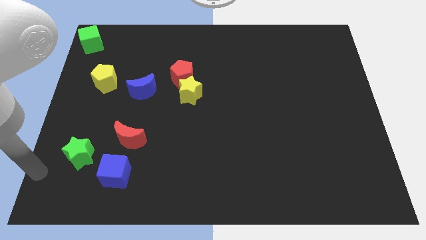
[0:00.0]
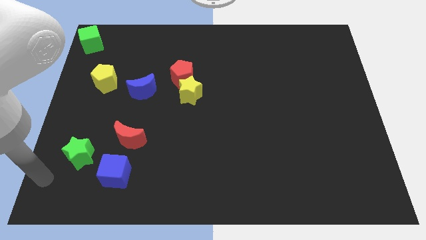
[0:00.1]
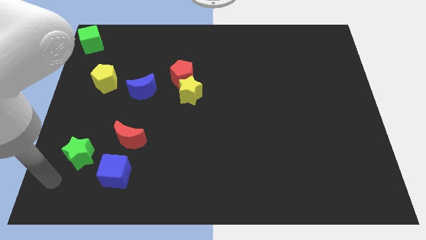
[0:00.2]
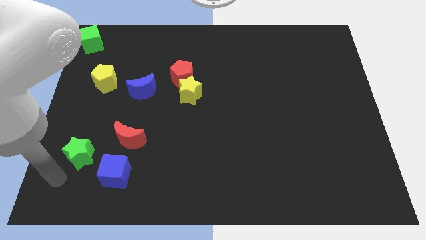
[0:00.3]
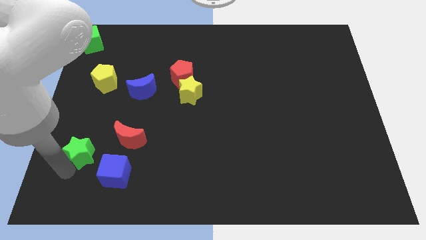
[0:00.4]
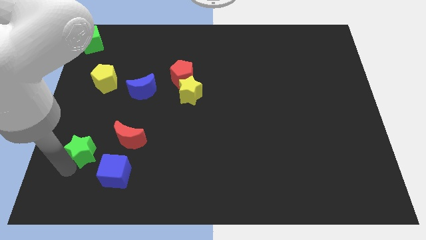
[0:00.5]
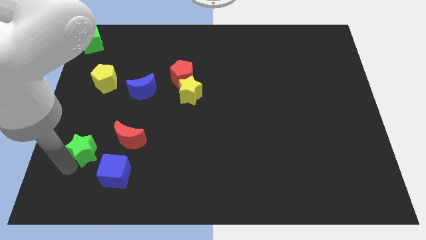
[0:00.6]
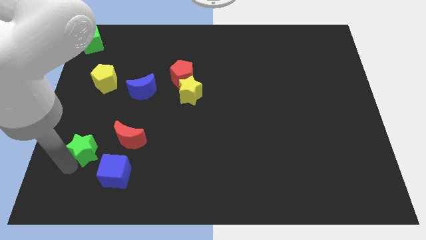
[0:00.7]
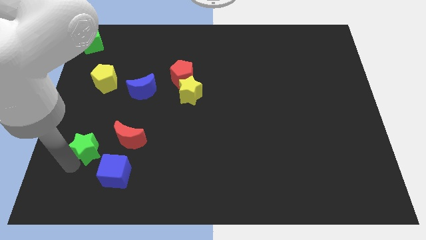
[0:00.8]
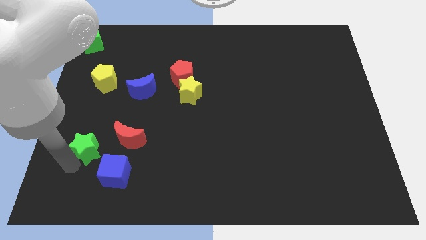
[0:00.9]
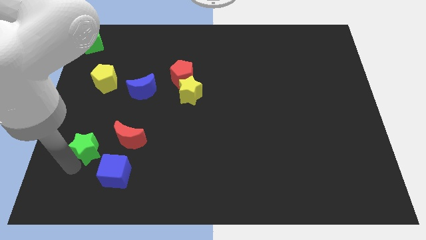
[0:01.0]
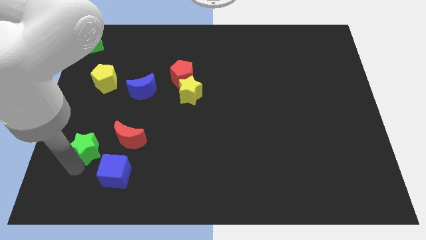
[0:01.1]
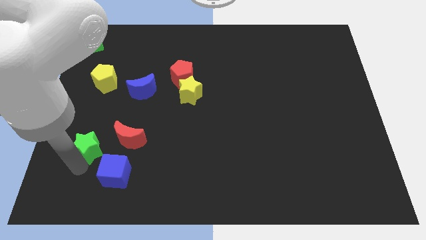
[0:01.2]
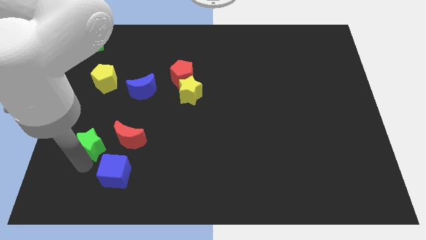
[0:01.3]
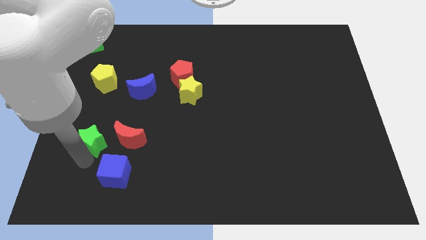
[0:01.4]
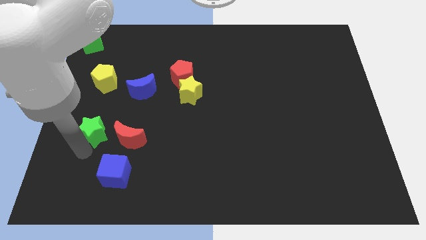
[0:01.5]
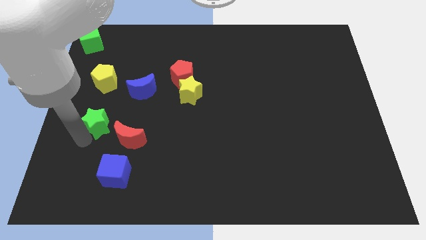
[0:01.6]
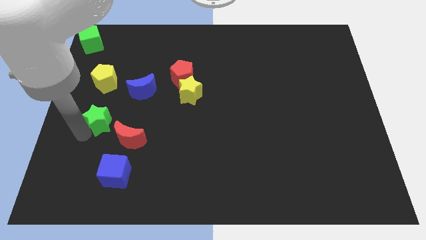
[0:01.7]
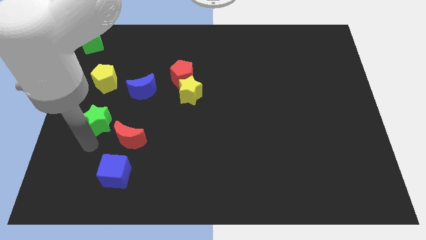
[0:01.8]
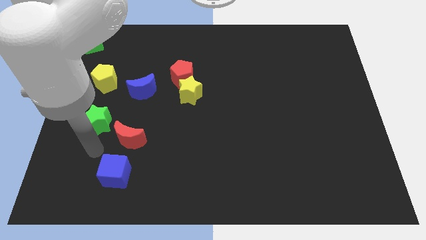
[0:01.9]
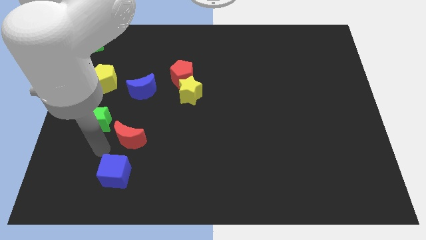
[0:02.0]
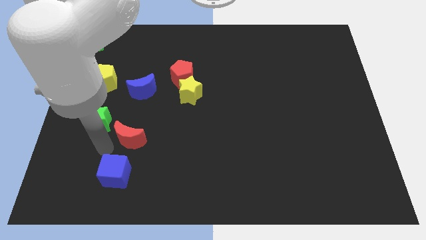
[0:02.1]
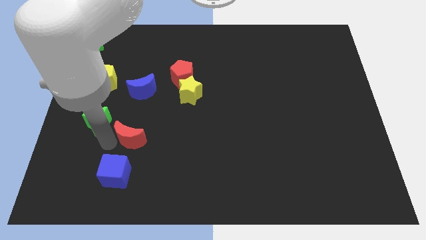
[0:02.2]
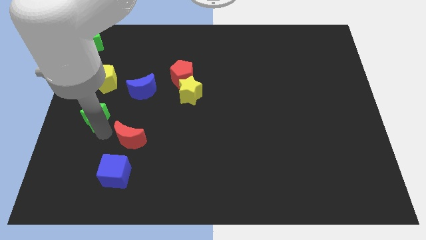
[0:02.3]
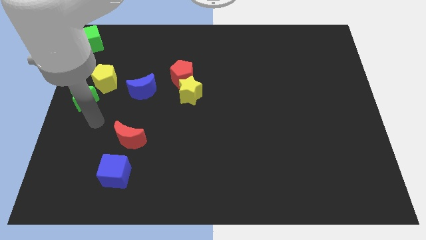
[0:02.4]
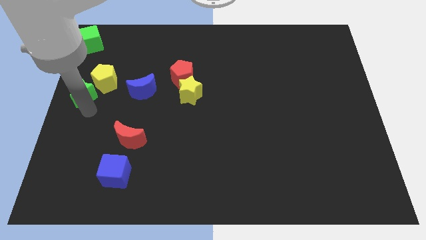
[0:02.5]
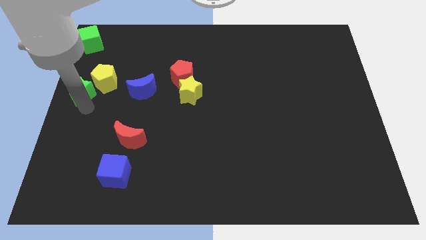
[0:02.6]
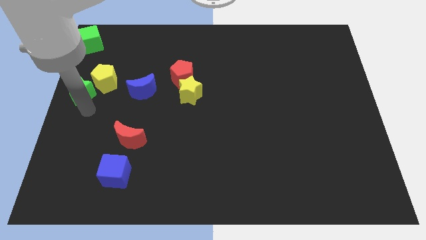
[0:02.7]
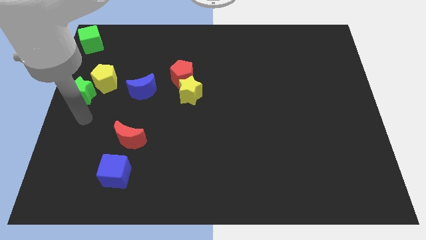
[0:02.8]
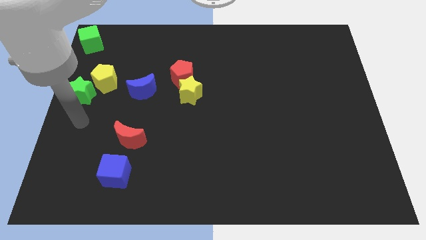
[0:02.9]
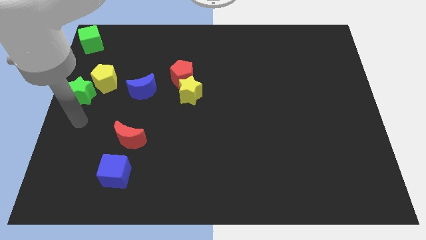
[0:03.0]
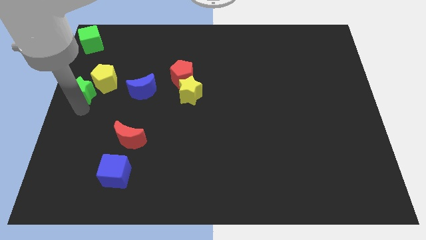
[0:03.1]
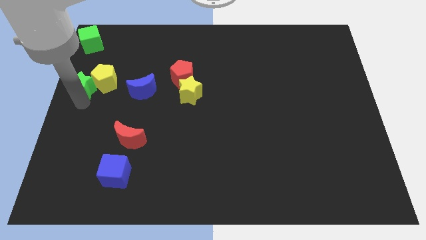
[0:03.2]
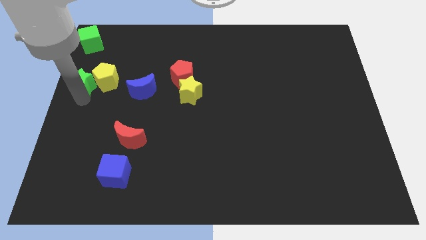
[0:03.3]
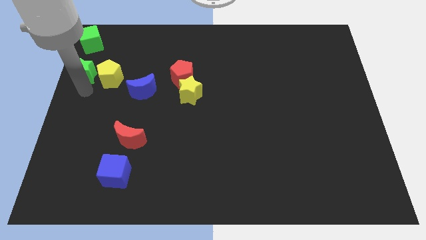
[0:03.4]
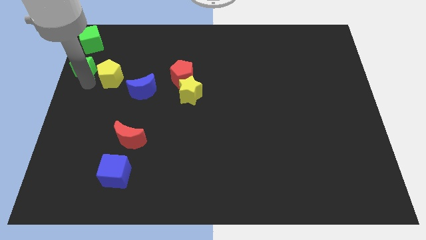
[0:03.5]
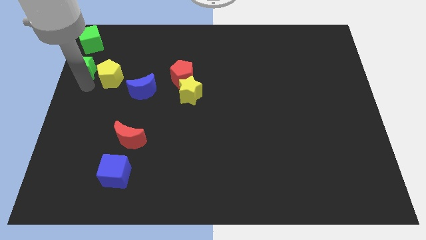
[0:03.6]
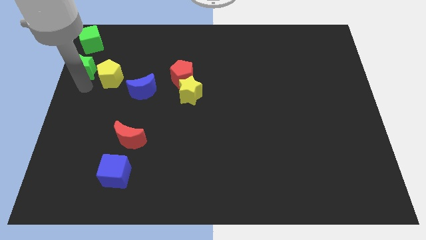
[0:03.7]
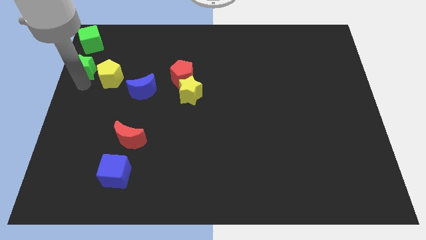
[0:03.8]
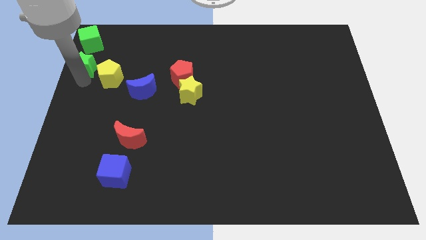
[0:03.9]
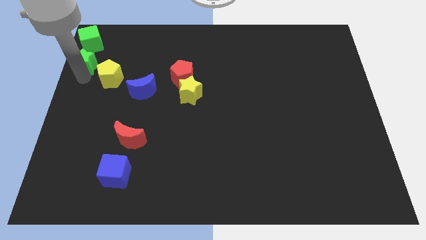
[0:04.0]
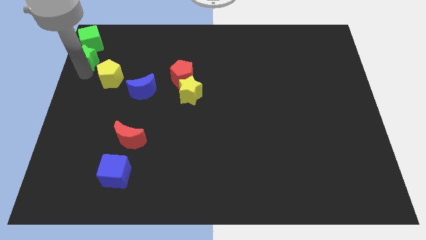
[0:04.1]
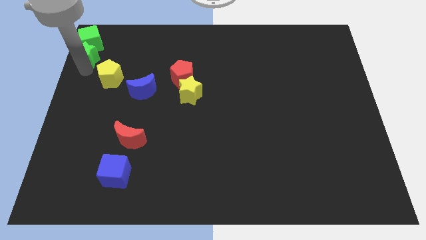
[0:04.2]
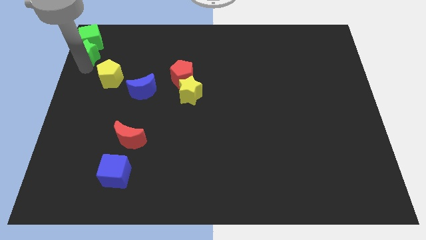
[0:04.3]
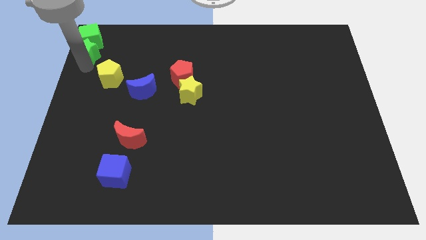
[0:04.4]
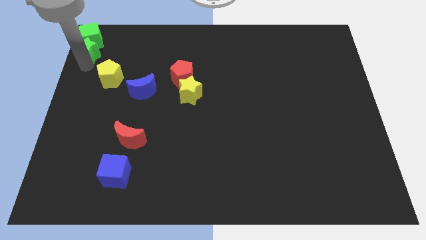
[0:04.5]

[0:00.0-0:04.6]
move the green star to the bottom of the green cube

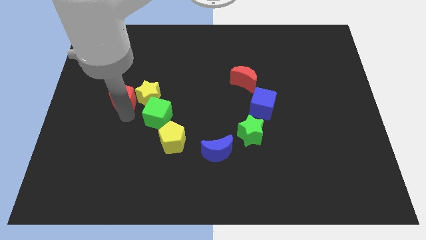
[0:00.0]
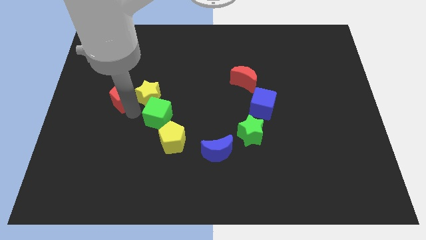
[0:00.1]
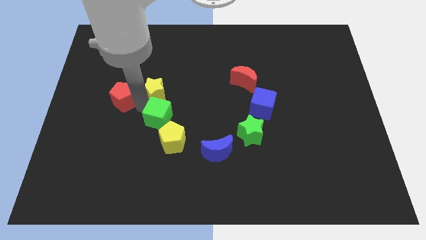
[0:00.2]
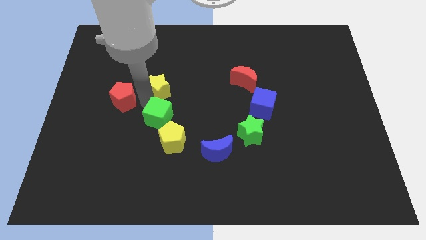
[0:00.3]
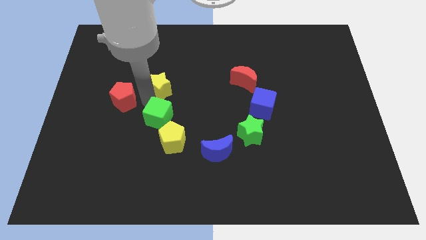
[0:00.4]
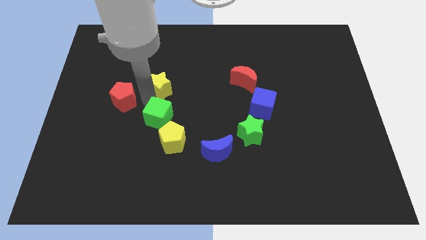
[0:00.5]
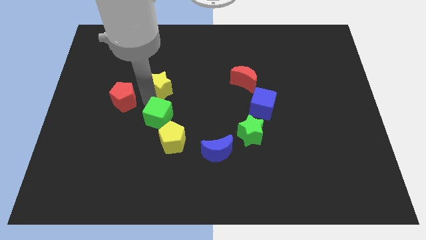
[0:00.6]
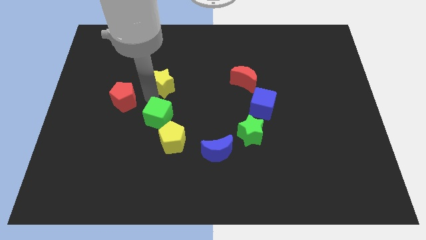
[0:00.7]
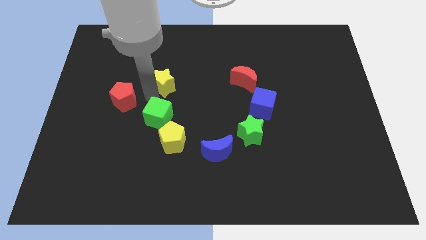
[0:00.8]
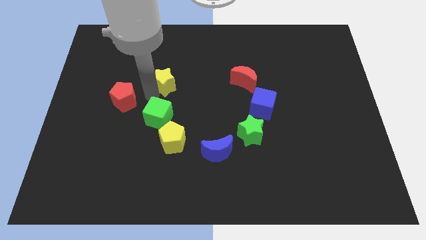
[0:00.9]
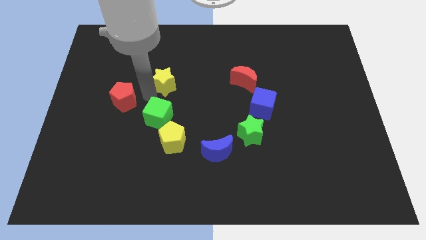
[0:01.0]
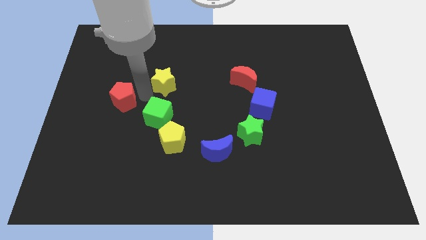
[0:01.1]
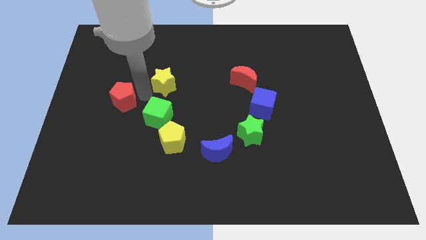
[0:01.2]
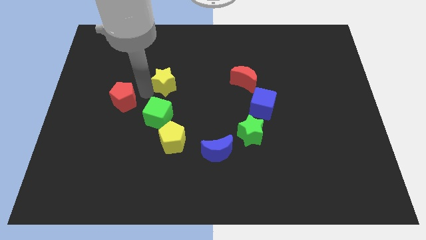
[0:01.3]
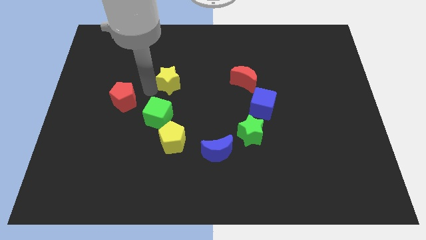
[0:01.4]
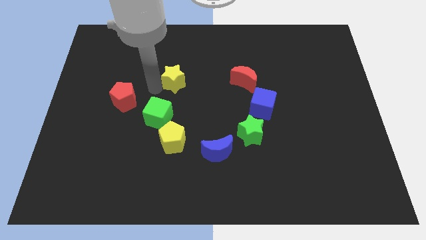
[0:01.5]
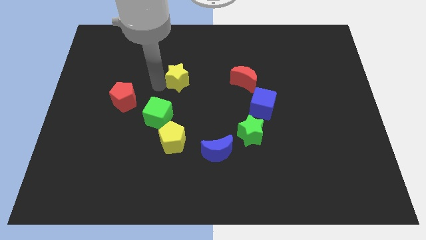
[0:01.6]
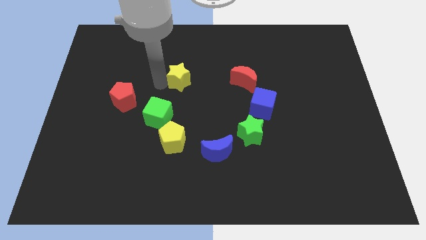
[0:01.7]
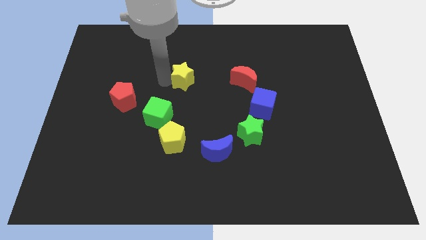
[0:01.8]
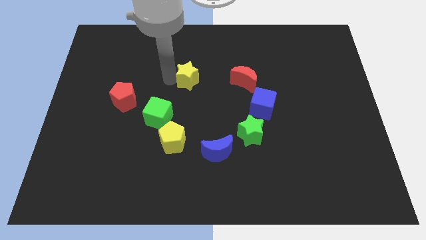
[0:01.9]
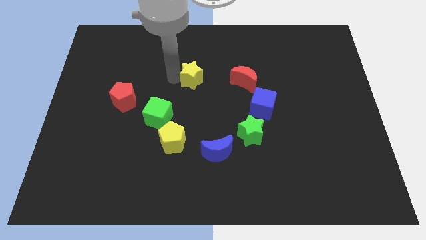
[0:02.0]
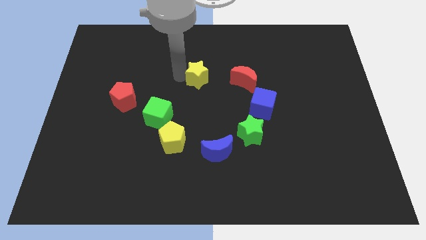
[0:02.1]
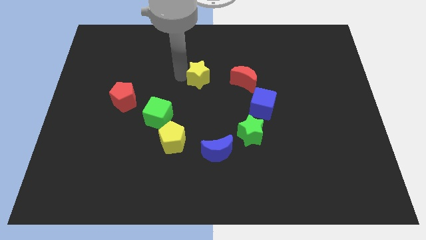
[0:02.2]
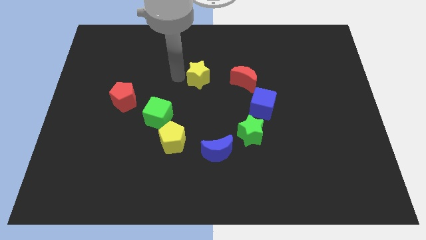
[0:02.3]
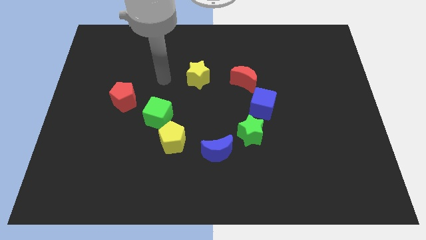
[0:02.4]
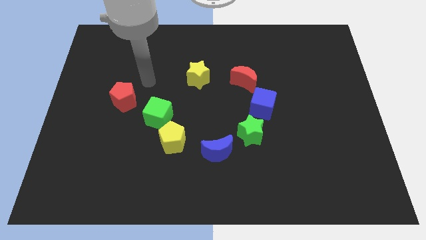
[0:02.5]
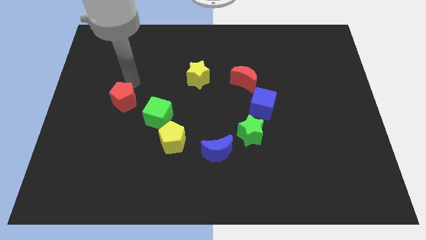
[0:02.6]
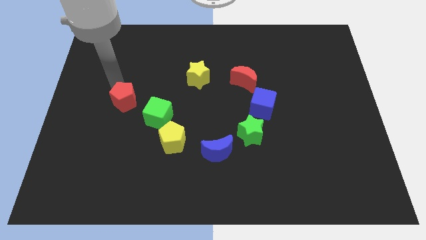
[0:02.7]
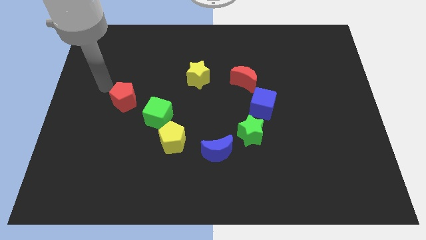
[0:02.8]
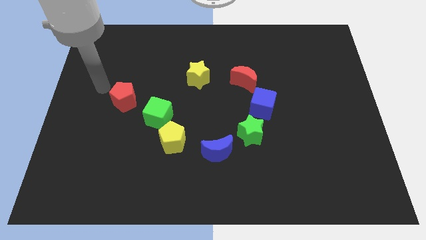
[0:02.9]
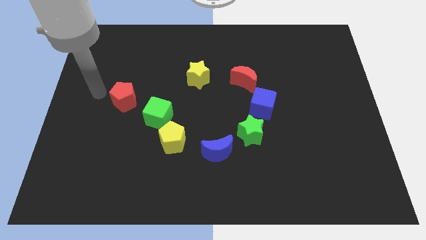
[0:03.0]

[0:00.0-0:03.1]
move the yellow star towards the left of red moon

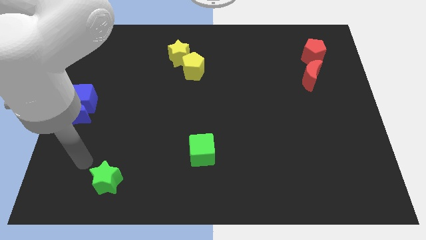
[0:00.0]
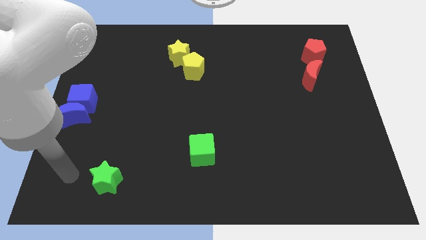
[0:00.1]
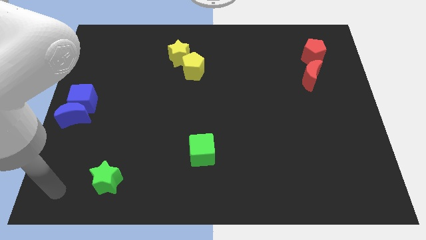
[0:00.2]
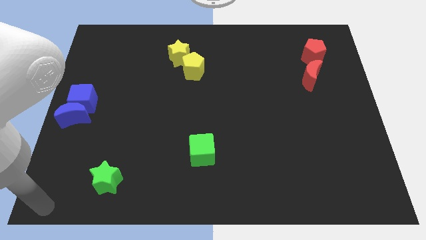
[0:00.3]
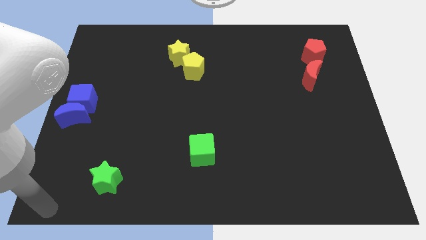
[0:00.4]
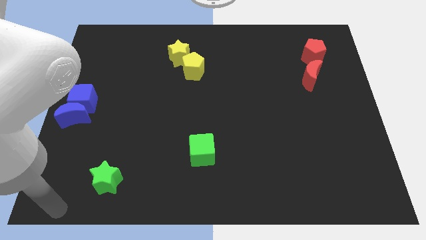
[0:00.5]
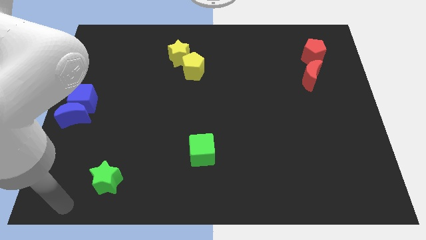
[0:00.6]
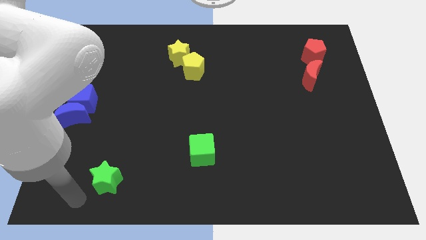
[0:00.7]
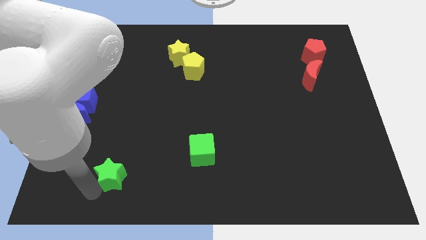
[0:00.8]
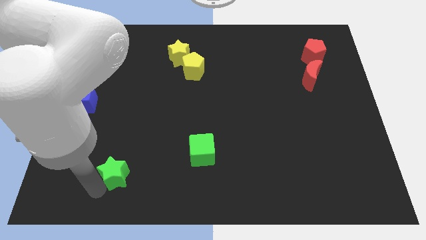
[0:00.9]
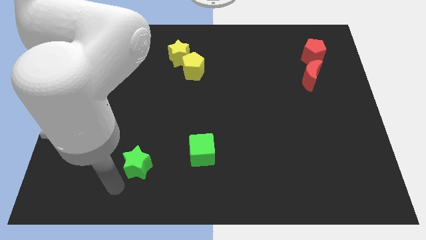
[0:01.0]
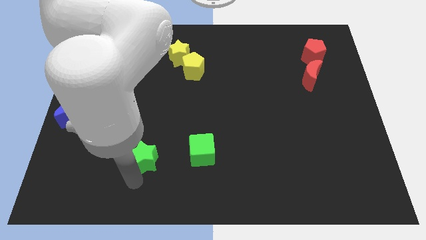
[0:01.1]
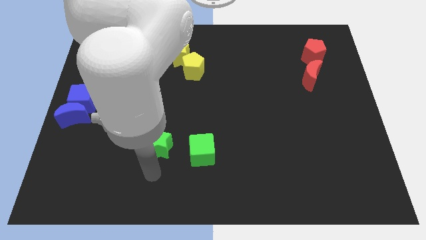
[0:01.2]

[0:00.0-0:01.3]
push green star towards green cube

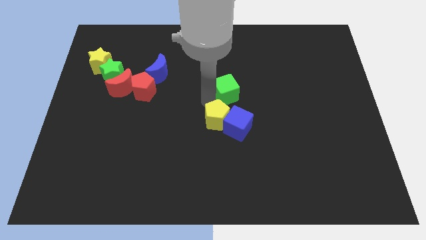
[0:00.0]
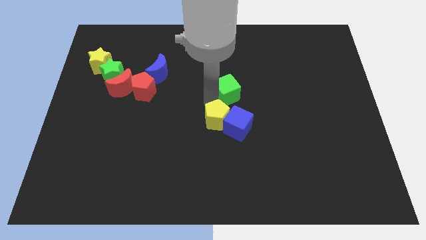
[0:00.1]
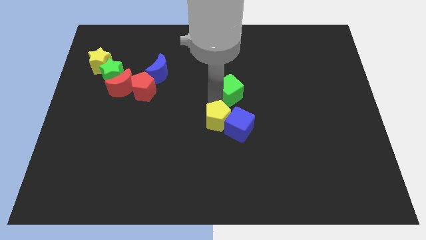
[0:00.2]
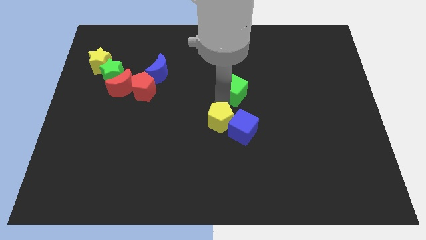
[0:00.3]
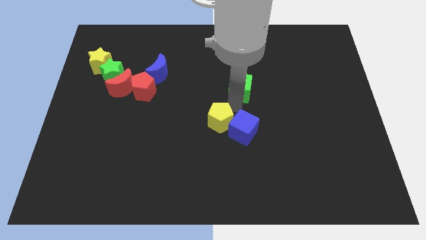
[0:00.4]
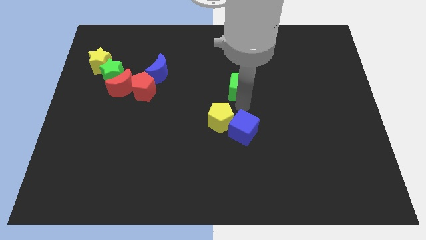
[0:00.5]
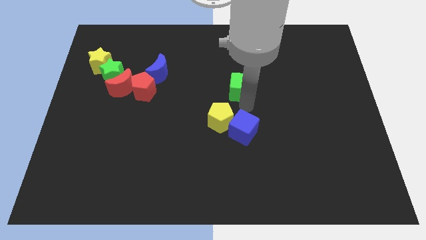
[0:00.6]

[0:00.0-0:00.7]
push green cube towards right side of the board
